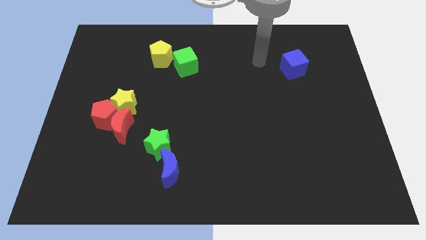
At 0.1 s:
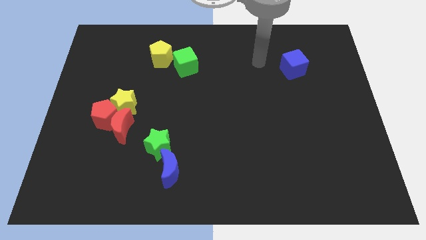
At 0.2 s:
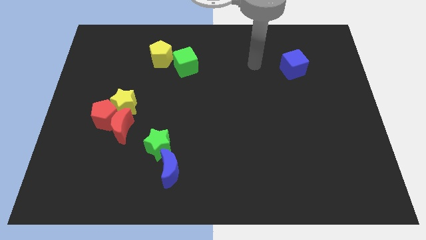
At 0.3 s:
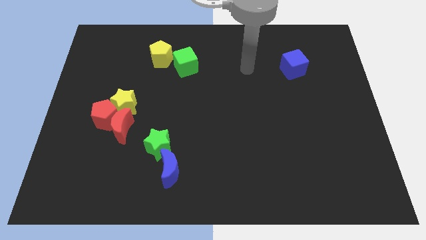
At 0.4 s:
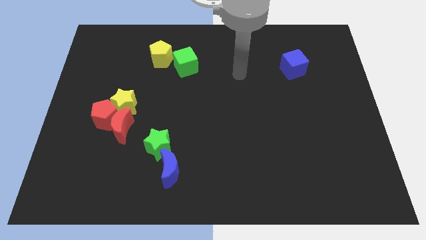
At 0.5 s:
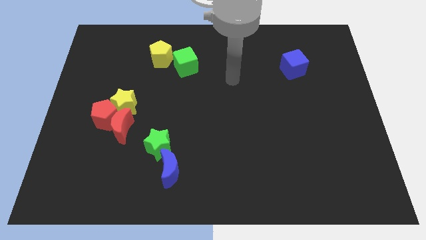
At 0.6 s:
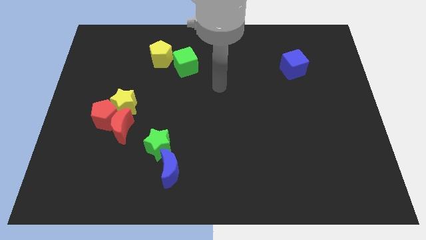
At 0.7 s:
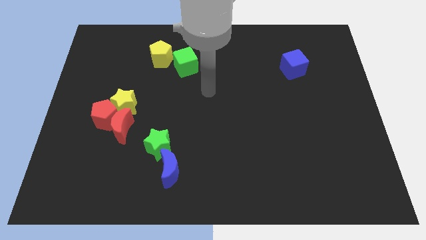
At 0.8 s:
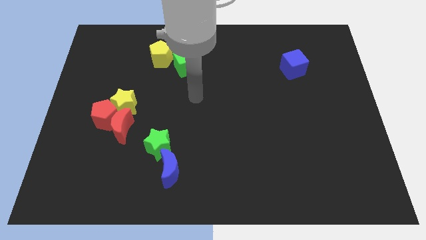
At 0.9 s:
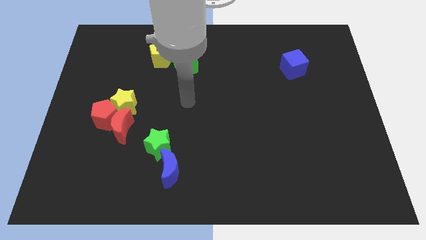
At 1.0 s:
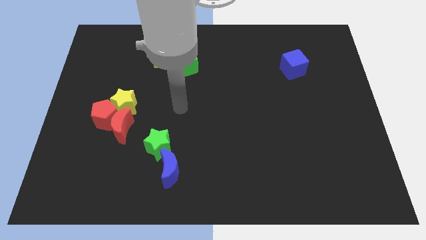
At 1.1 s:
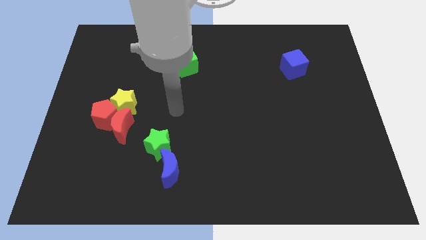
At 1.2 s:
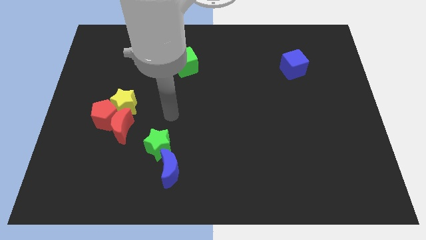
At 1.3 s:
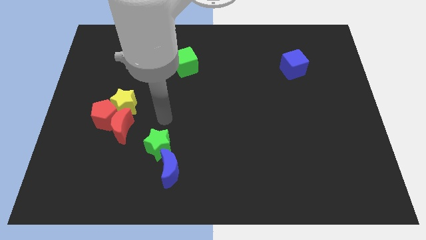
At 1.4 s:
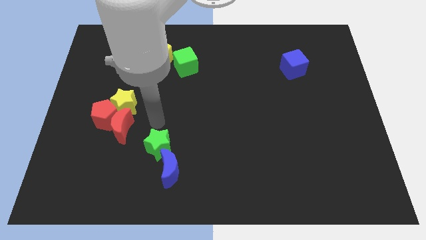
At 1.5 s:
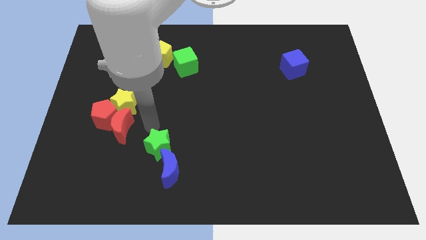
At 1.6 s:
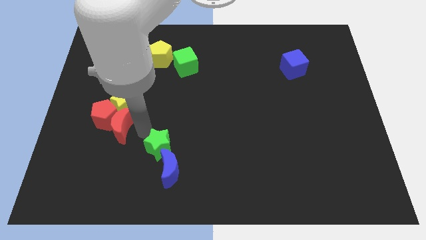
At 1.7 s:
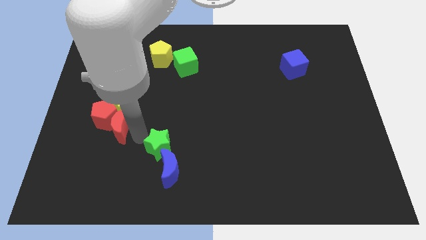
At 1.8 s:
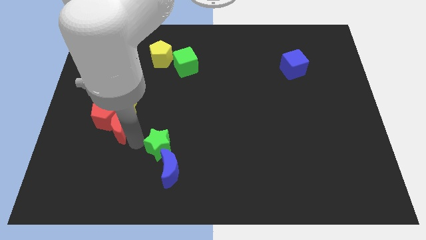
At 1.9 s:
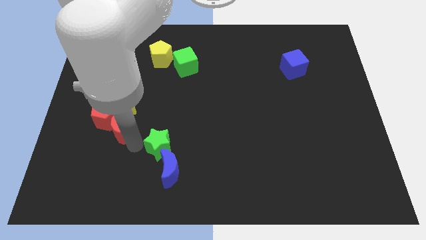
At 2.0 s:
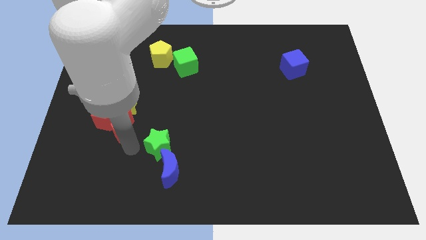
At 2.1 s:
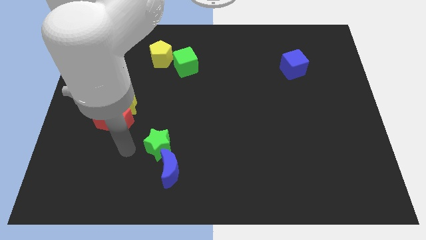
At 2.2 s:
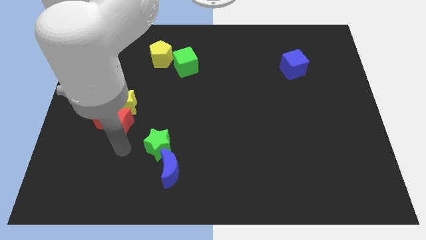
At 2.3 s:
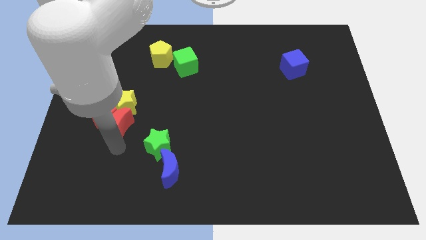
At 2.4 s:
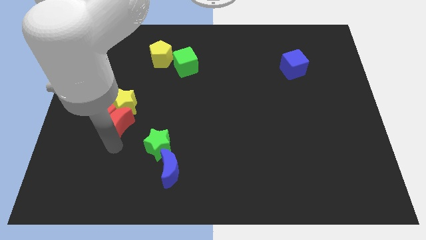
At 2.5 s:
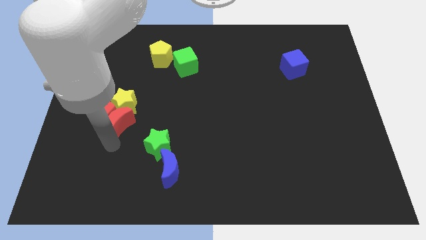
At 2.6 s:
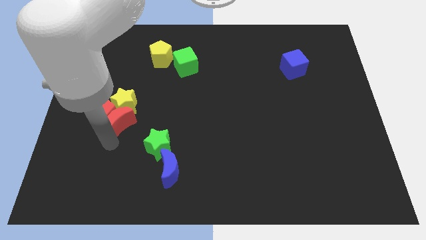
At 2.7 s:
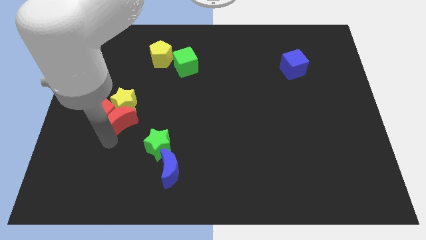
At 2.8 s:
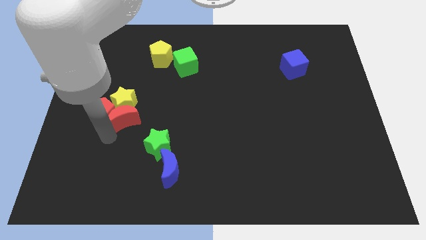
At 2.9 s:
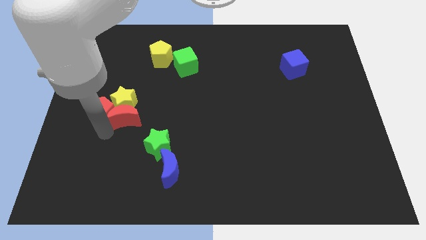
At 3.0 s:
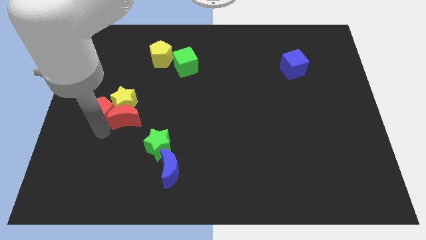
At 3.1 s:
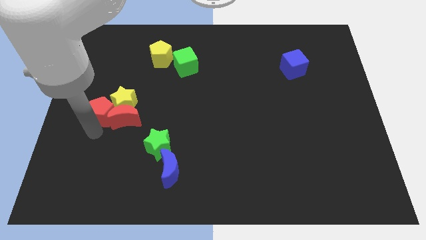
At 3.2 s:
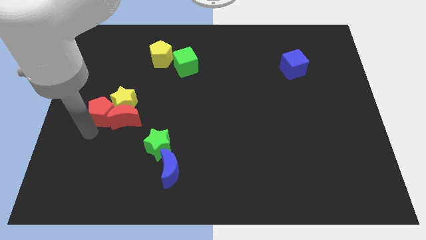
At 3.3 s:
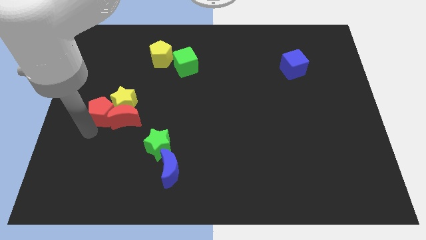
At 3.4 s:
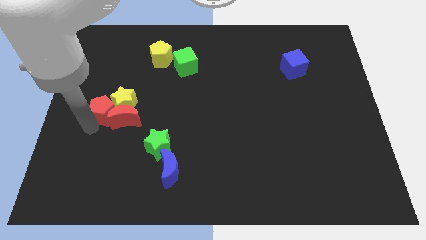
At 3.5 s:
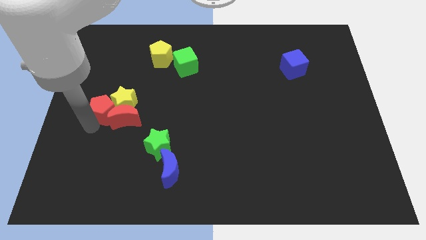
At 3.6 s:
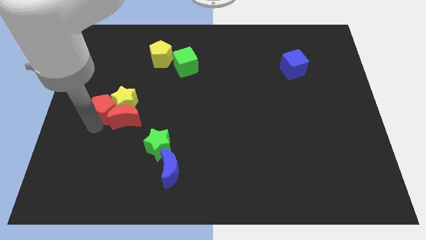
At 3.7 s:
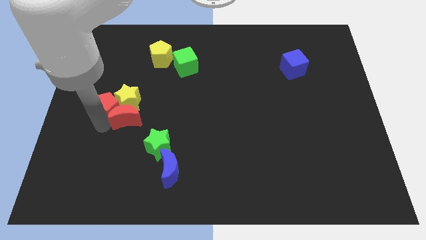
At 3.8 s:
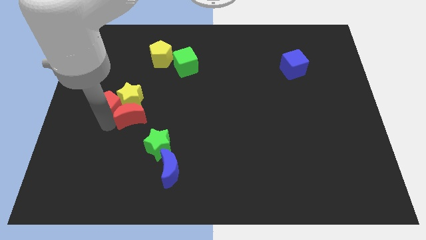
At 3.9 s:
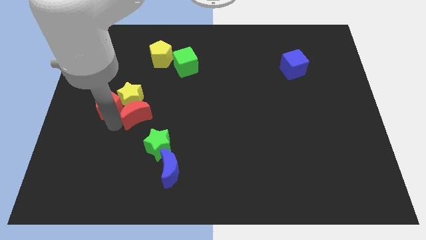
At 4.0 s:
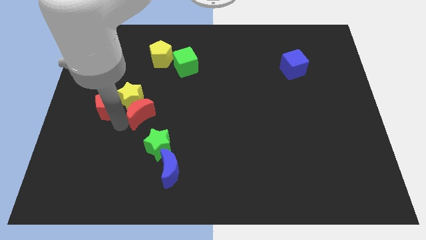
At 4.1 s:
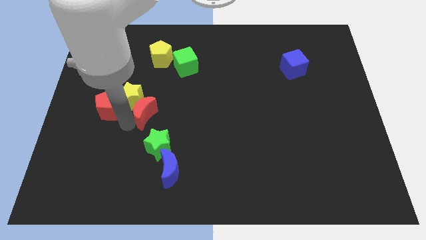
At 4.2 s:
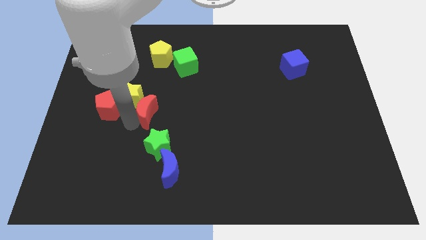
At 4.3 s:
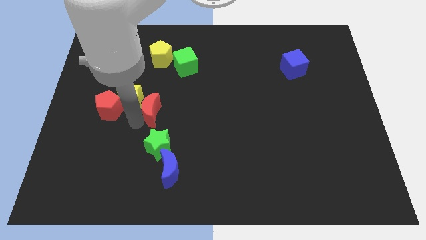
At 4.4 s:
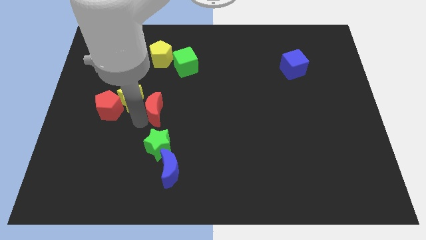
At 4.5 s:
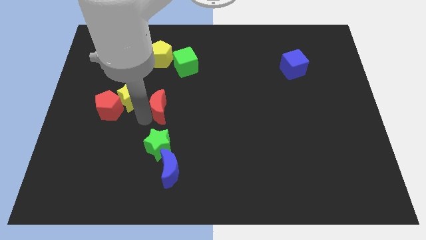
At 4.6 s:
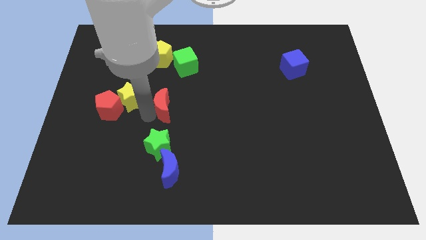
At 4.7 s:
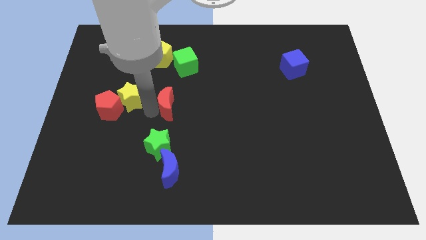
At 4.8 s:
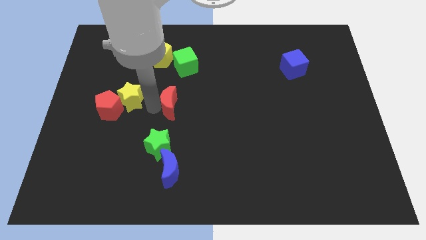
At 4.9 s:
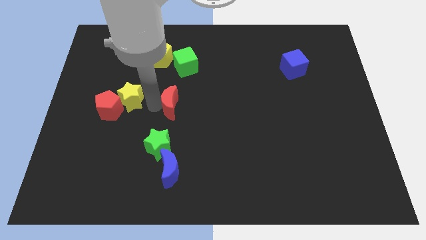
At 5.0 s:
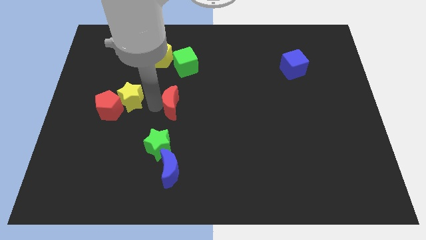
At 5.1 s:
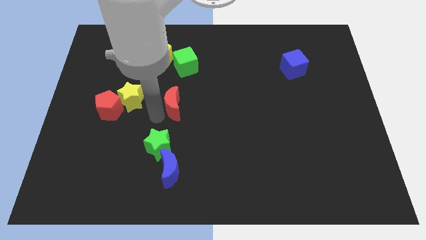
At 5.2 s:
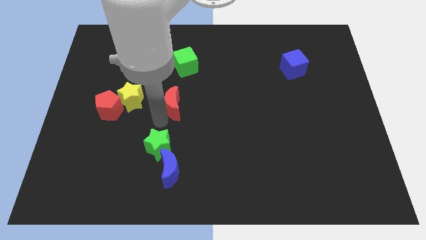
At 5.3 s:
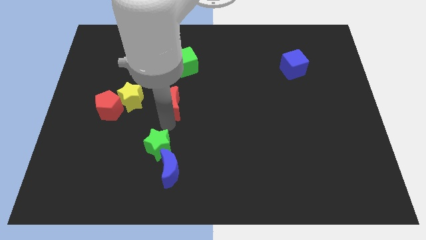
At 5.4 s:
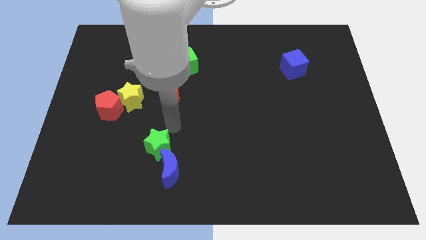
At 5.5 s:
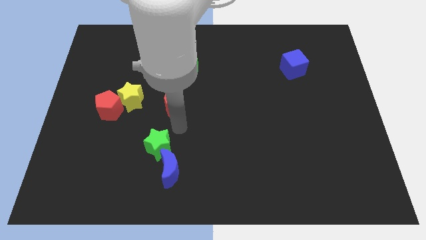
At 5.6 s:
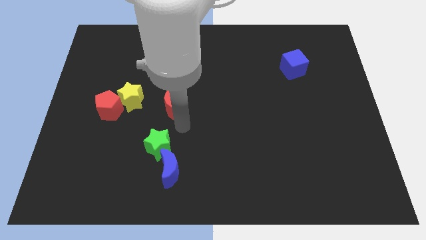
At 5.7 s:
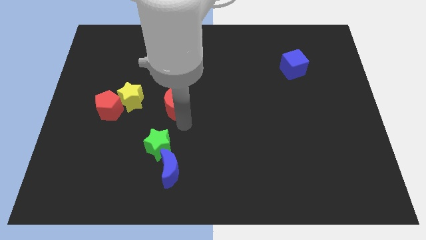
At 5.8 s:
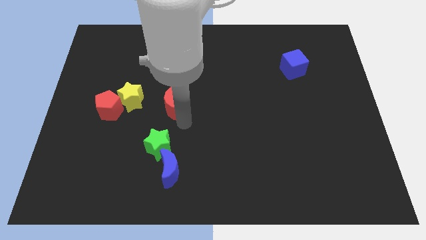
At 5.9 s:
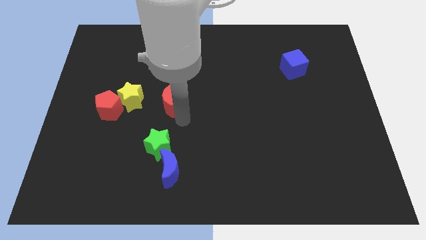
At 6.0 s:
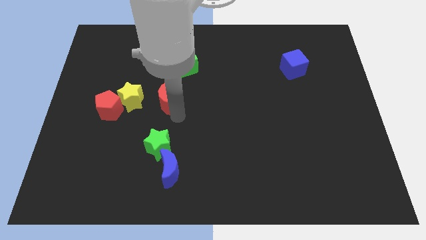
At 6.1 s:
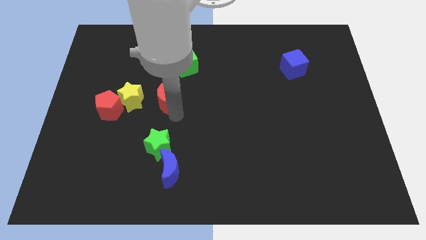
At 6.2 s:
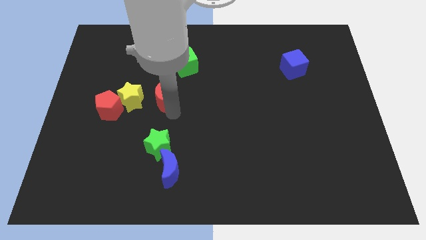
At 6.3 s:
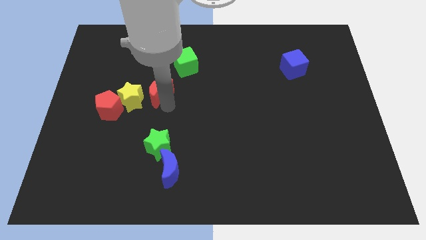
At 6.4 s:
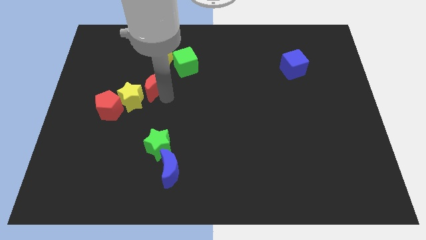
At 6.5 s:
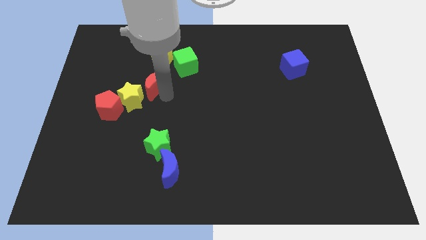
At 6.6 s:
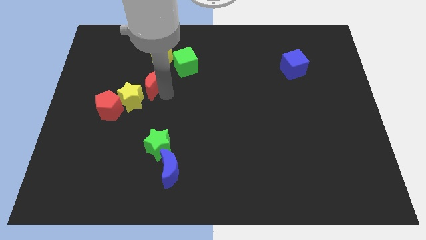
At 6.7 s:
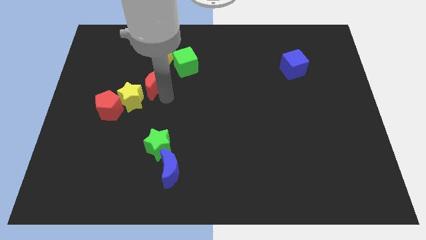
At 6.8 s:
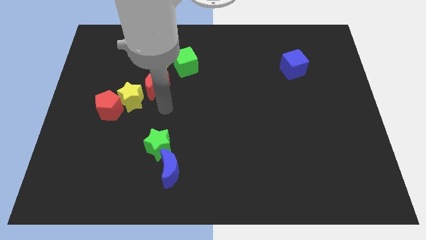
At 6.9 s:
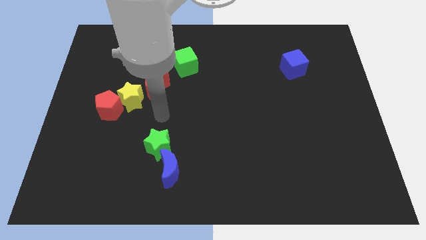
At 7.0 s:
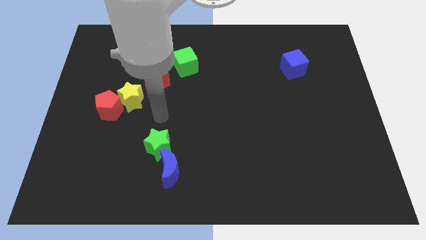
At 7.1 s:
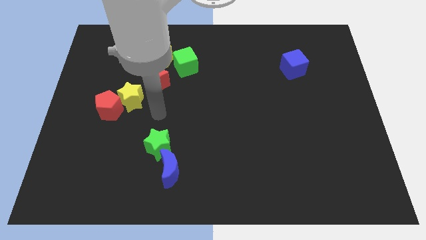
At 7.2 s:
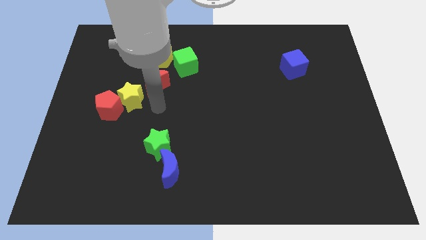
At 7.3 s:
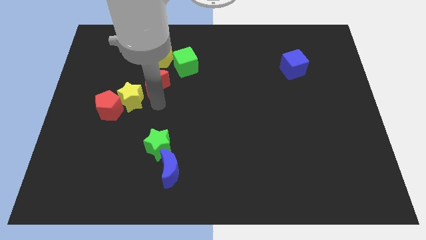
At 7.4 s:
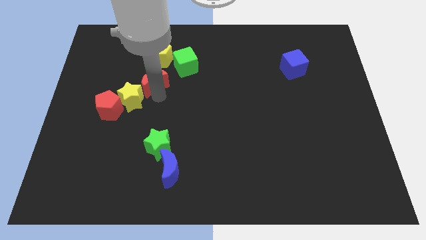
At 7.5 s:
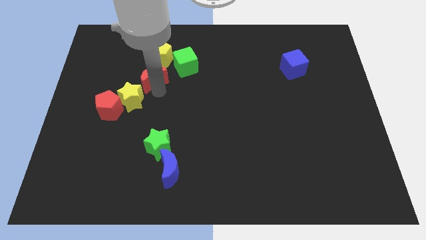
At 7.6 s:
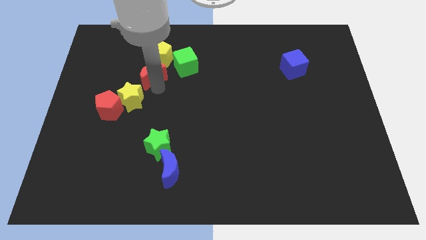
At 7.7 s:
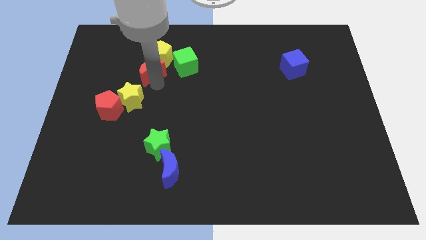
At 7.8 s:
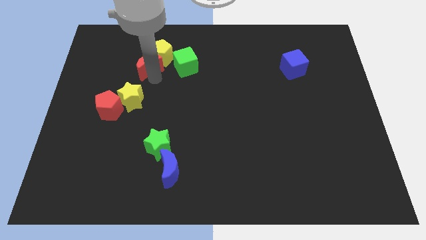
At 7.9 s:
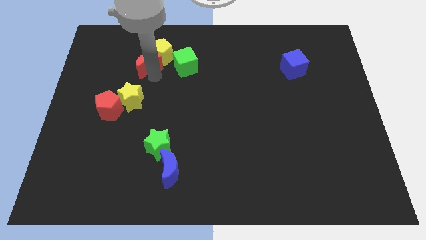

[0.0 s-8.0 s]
slide the red moon to the yellow pentagon

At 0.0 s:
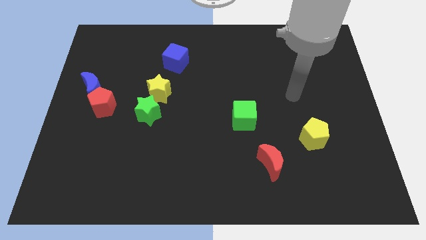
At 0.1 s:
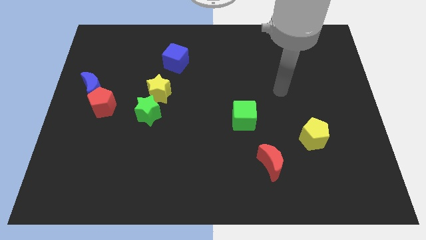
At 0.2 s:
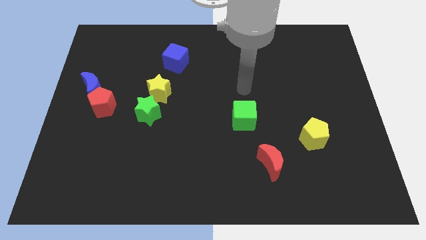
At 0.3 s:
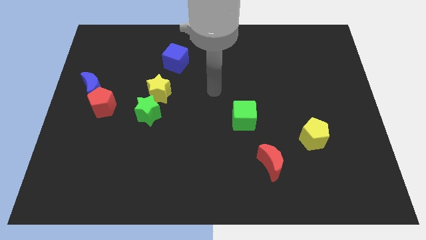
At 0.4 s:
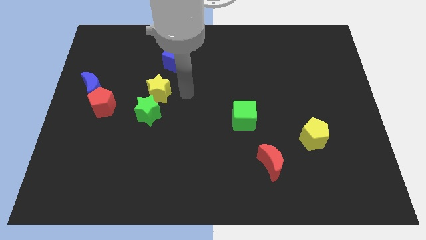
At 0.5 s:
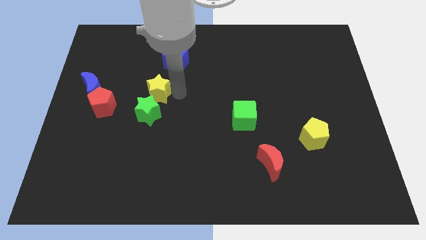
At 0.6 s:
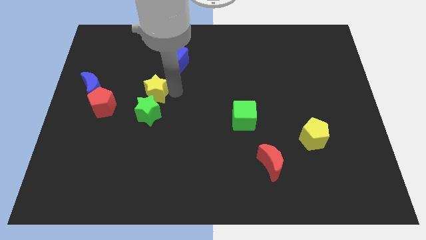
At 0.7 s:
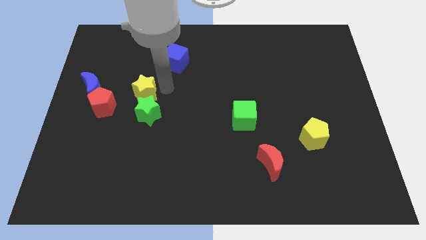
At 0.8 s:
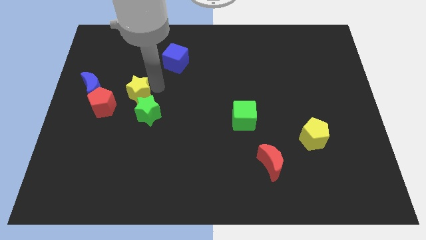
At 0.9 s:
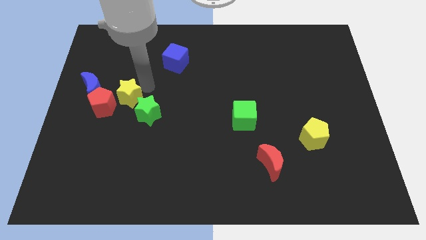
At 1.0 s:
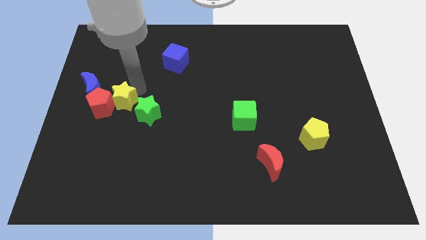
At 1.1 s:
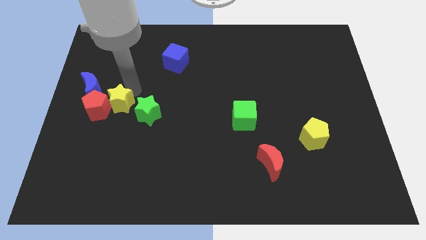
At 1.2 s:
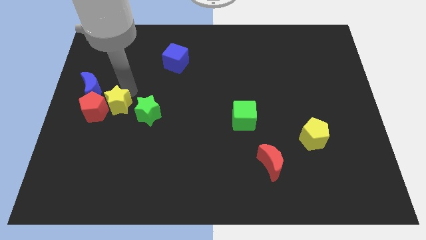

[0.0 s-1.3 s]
push the yellow star towards the red pentagon
